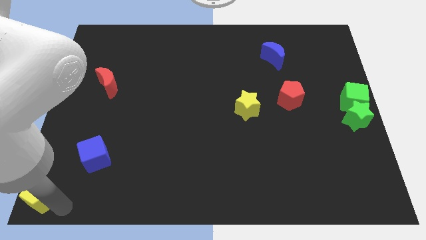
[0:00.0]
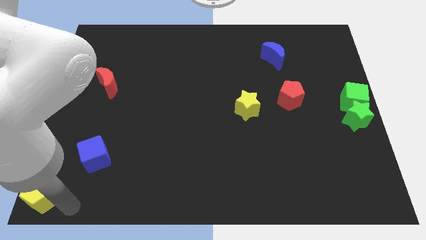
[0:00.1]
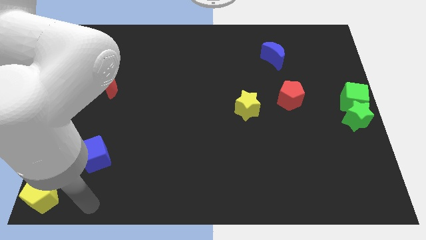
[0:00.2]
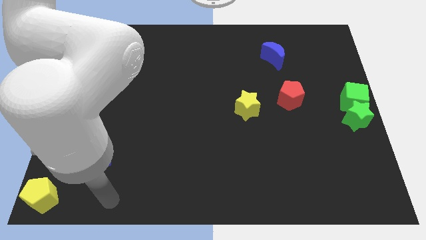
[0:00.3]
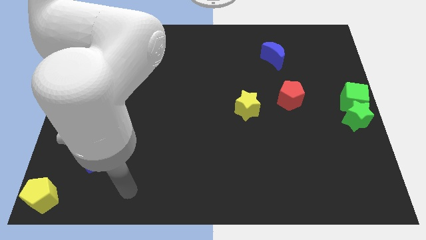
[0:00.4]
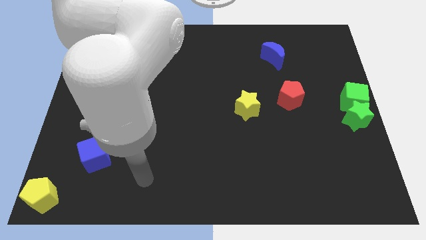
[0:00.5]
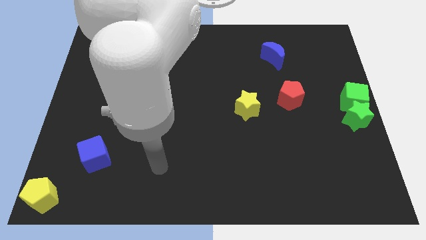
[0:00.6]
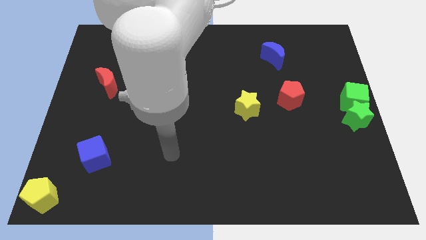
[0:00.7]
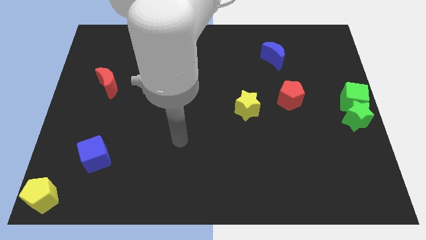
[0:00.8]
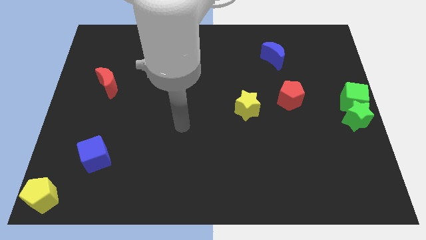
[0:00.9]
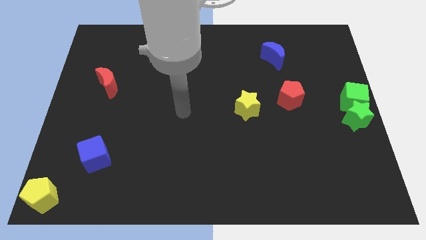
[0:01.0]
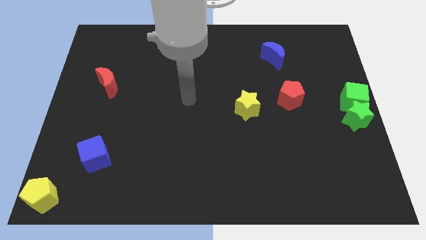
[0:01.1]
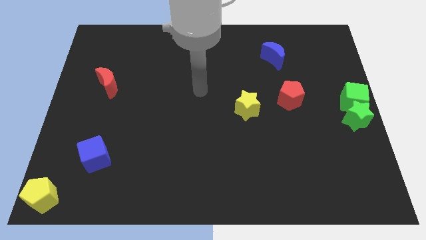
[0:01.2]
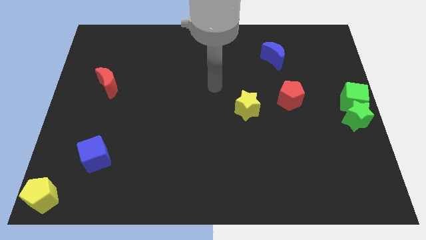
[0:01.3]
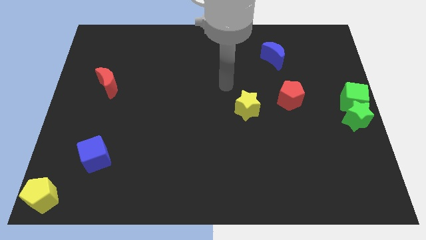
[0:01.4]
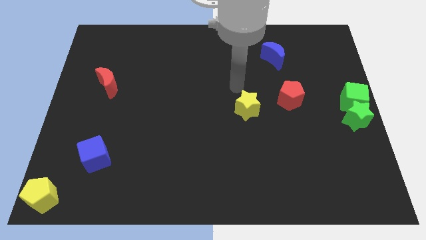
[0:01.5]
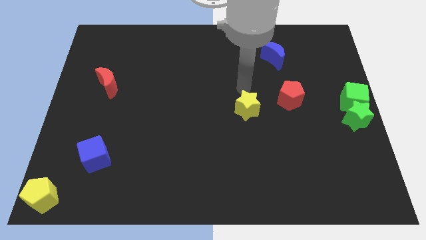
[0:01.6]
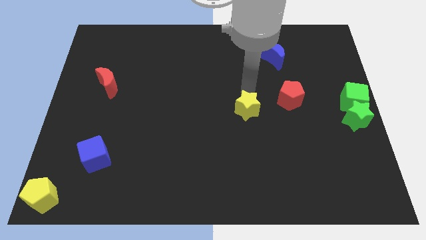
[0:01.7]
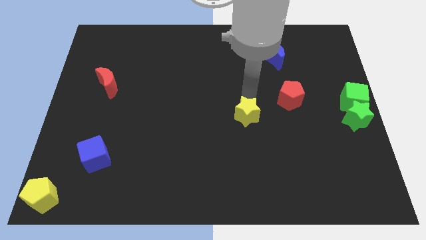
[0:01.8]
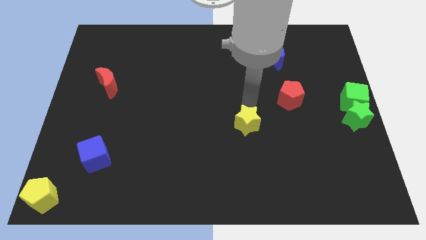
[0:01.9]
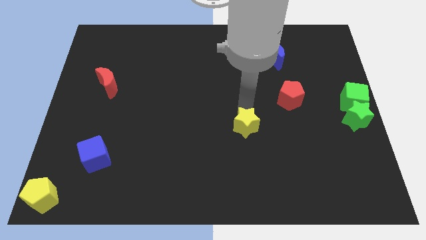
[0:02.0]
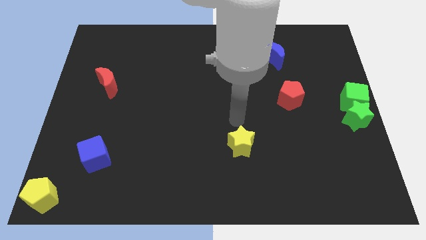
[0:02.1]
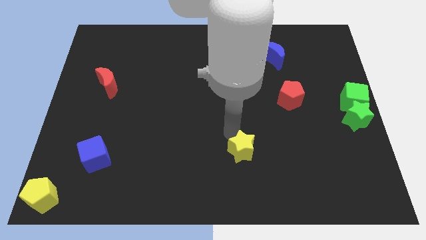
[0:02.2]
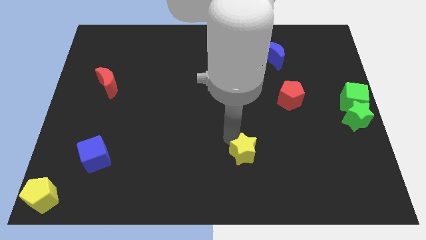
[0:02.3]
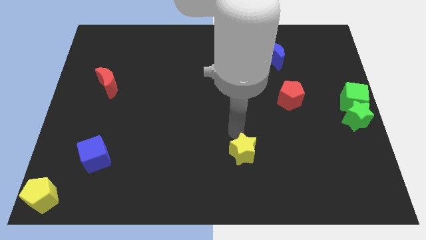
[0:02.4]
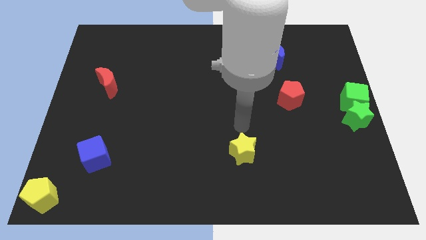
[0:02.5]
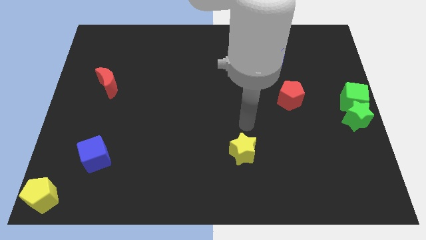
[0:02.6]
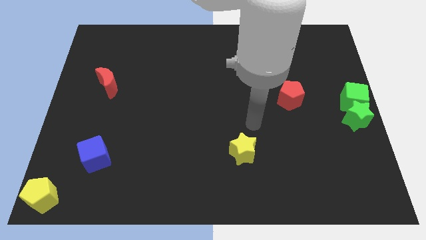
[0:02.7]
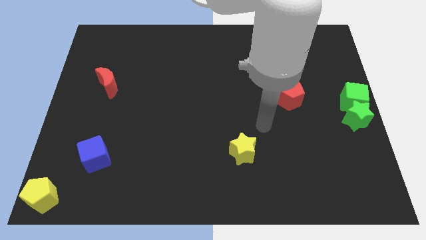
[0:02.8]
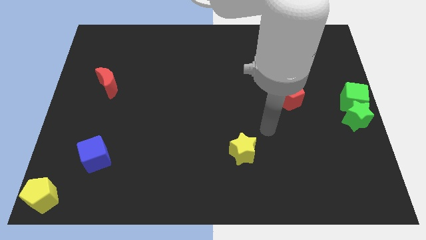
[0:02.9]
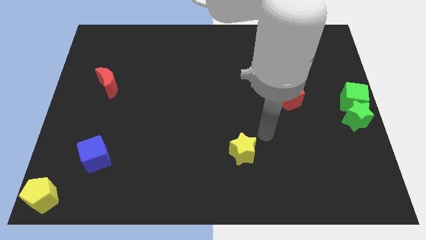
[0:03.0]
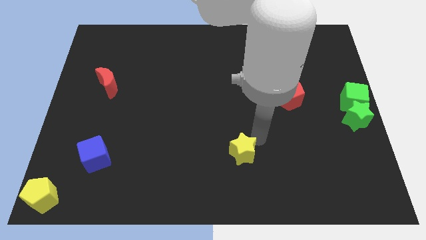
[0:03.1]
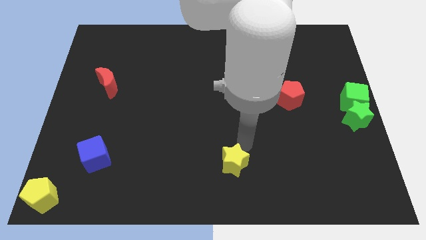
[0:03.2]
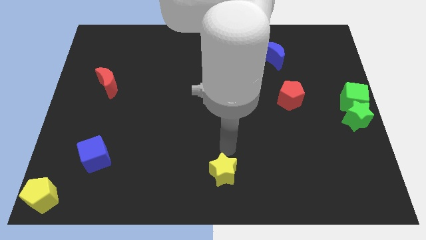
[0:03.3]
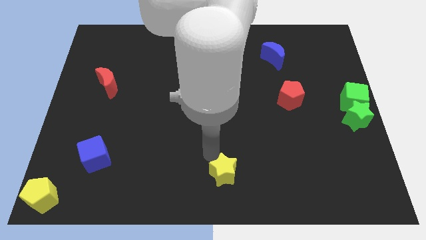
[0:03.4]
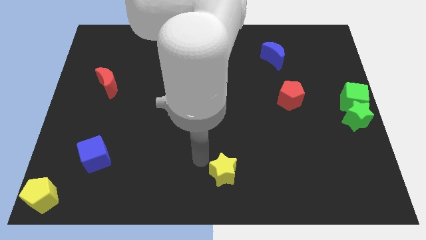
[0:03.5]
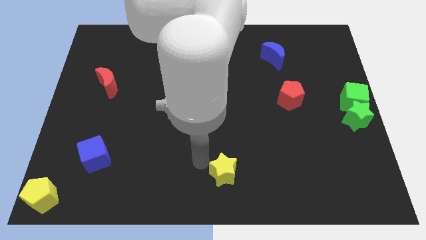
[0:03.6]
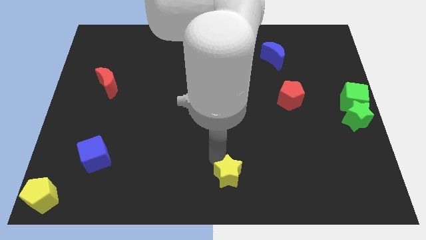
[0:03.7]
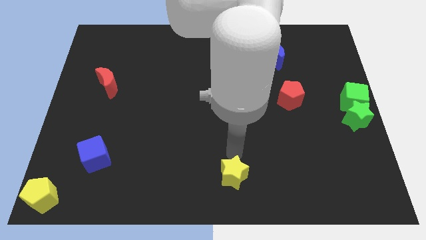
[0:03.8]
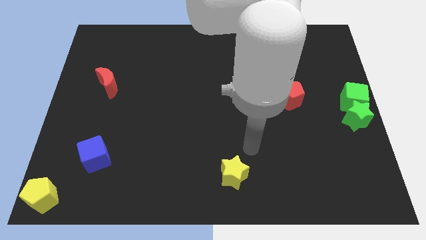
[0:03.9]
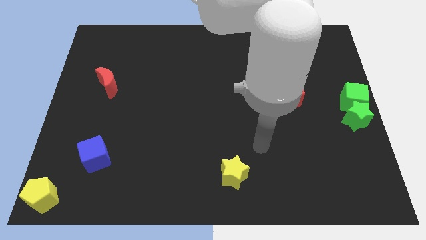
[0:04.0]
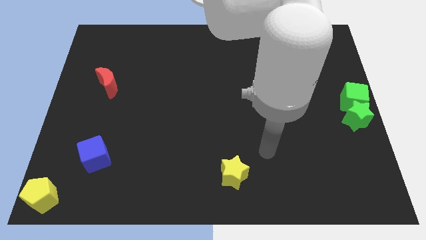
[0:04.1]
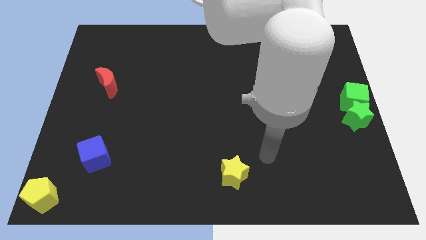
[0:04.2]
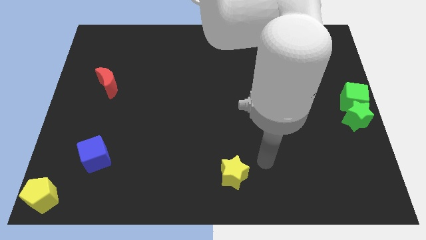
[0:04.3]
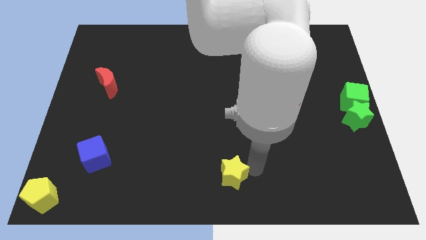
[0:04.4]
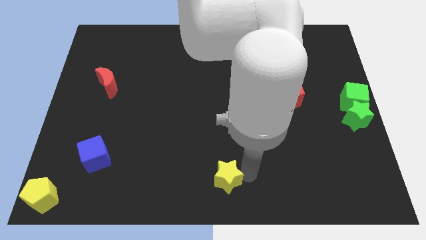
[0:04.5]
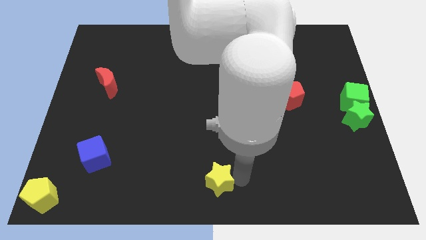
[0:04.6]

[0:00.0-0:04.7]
push the yellow star towards the bottom center of the board

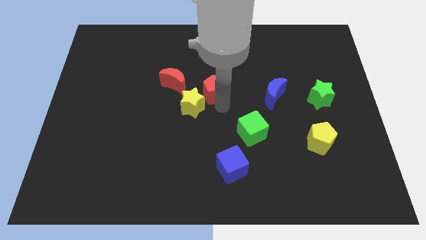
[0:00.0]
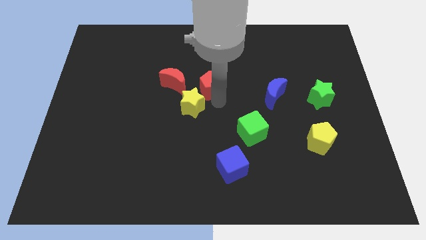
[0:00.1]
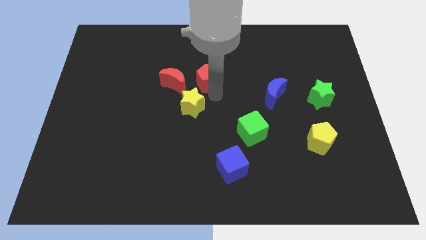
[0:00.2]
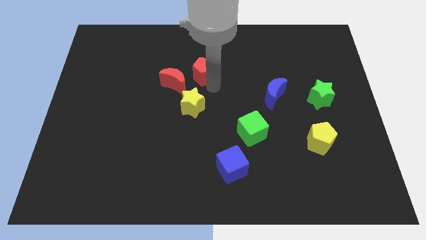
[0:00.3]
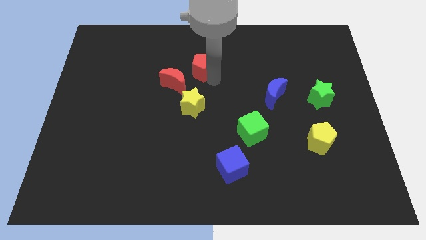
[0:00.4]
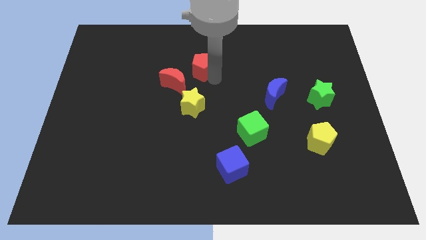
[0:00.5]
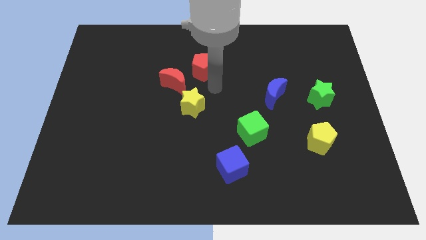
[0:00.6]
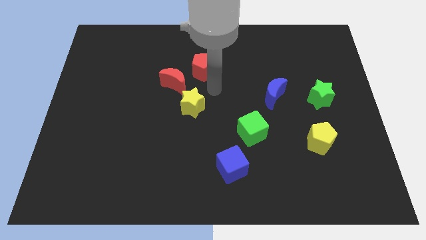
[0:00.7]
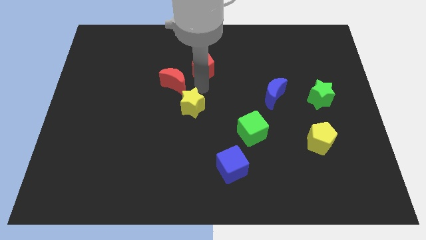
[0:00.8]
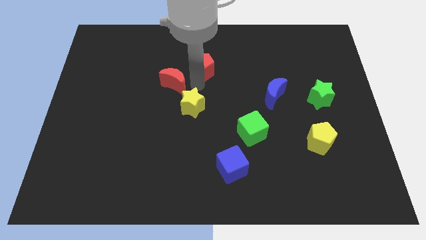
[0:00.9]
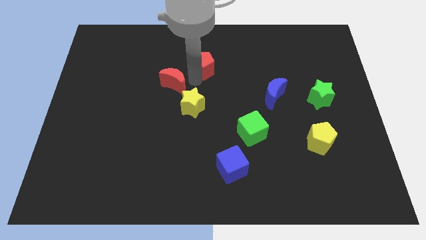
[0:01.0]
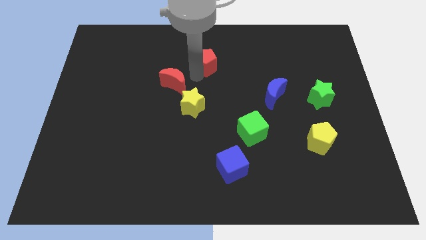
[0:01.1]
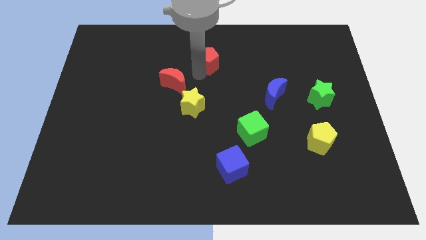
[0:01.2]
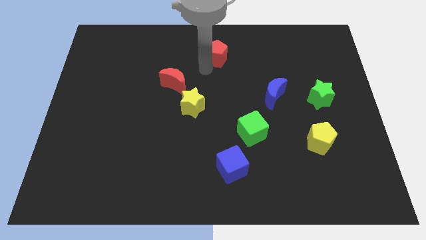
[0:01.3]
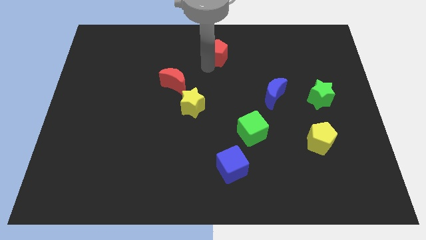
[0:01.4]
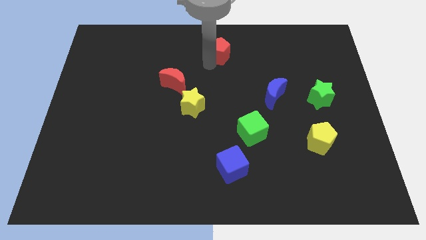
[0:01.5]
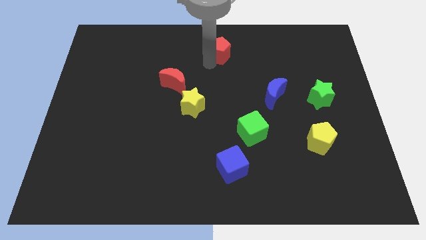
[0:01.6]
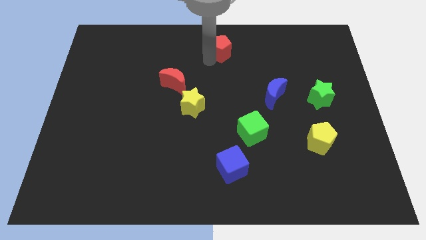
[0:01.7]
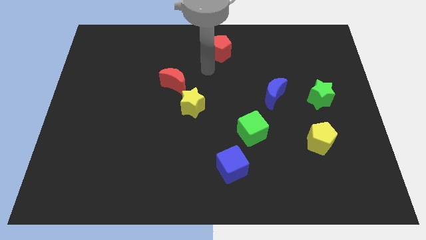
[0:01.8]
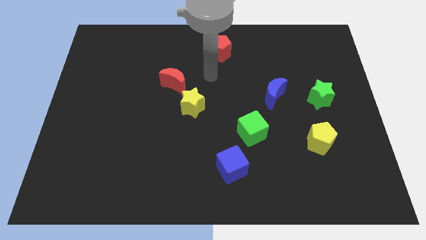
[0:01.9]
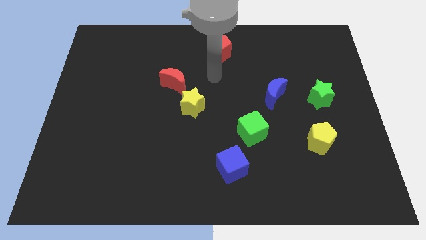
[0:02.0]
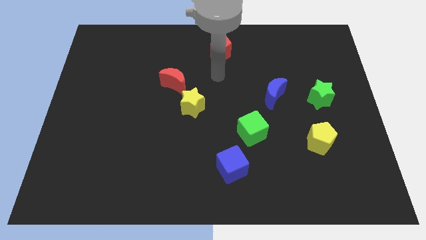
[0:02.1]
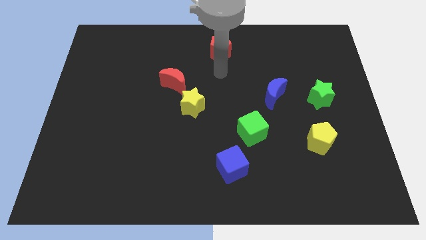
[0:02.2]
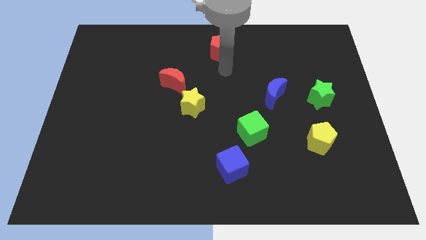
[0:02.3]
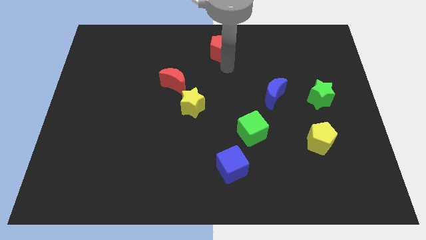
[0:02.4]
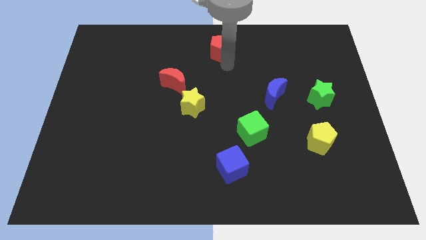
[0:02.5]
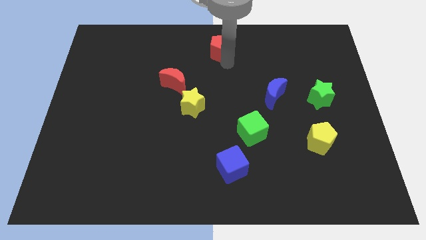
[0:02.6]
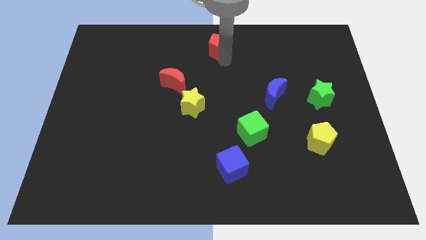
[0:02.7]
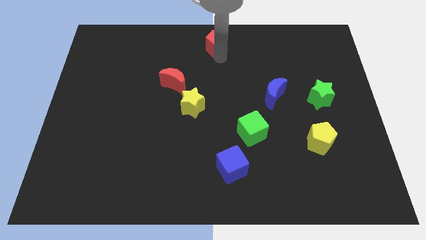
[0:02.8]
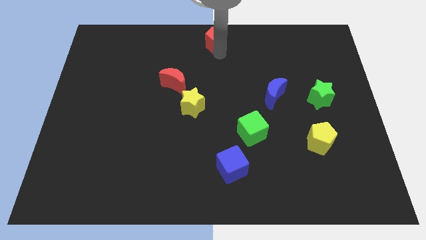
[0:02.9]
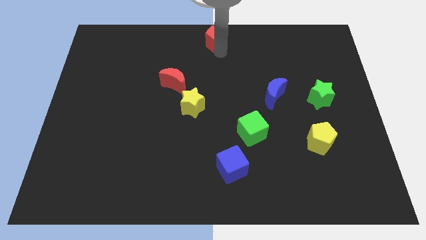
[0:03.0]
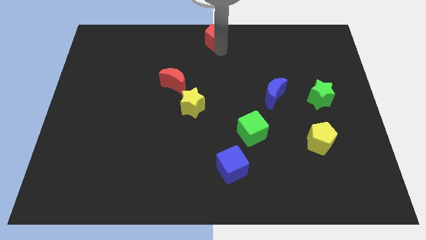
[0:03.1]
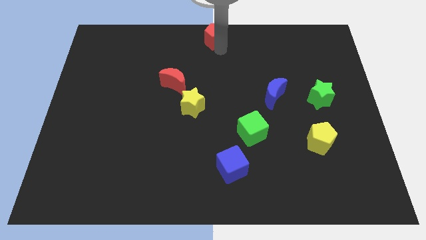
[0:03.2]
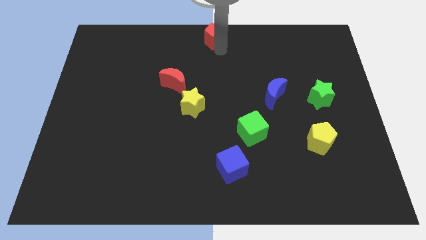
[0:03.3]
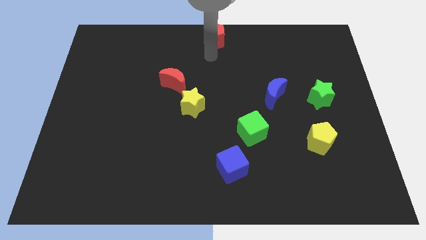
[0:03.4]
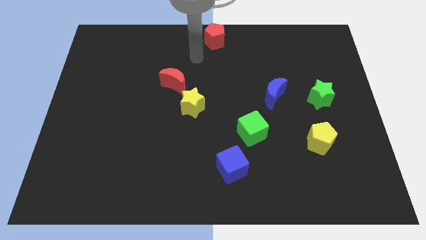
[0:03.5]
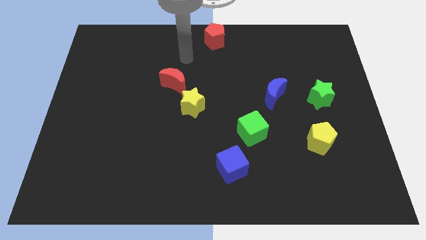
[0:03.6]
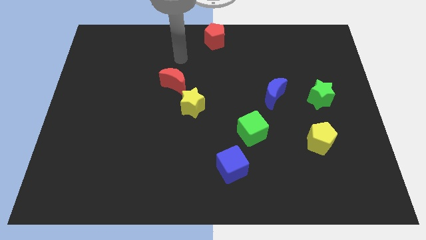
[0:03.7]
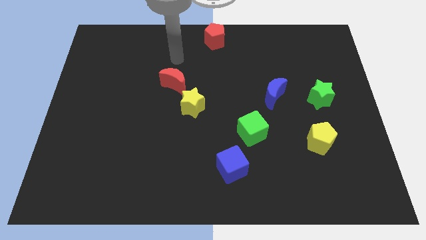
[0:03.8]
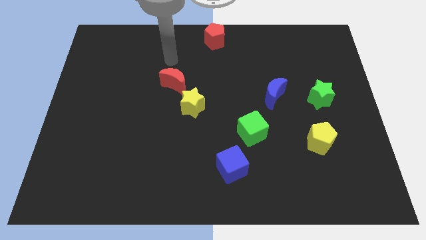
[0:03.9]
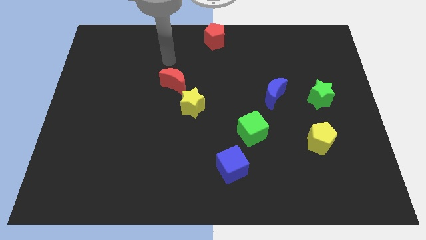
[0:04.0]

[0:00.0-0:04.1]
slide red pentagon to the top center

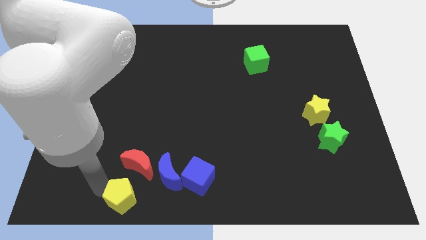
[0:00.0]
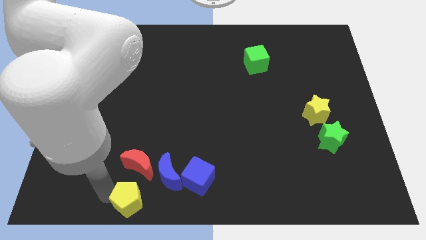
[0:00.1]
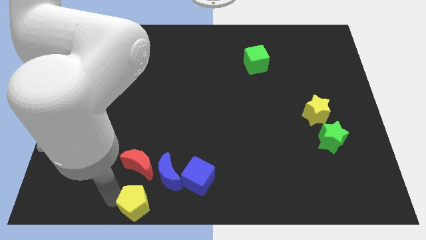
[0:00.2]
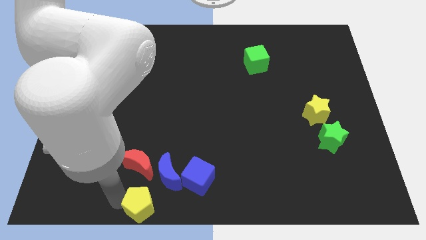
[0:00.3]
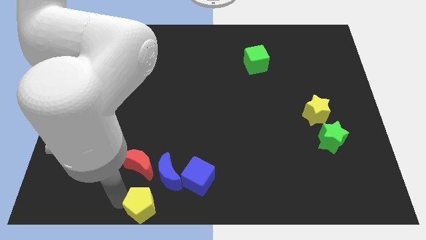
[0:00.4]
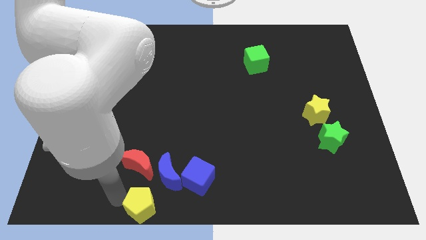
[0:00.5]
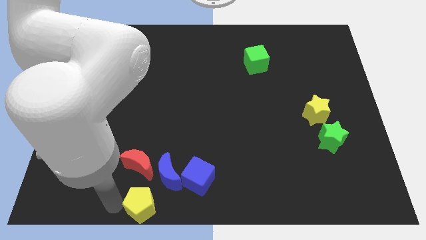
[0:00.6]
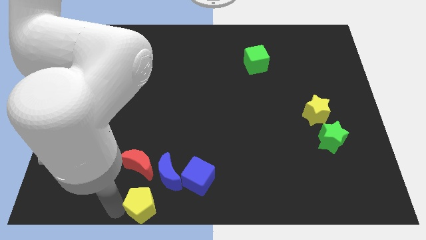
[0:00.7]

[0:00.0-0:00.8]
place the yellow pentagon below the red crescent
